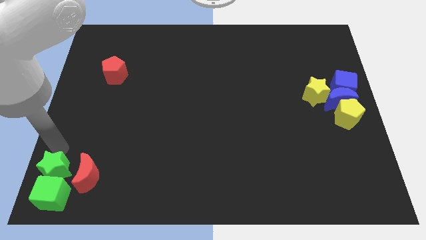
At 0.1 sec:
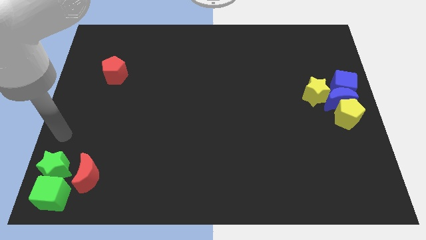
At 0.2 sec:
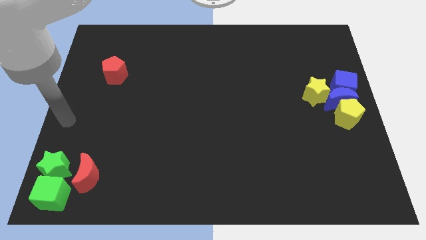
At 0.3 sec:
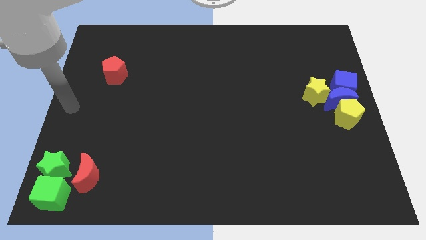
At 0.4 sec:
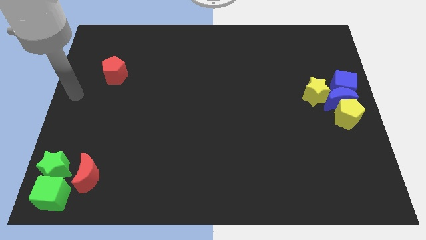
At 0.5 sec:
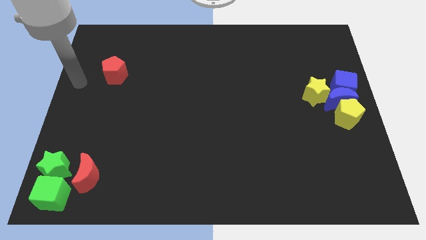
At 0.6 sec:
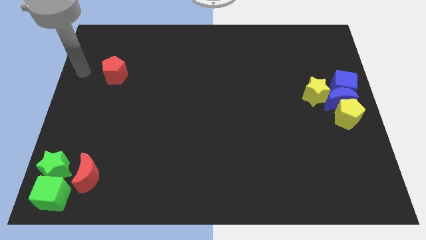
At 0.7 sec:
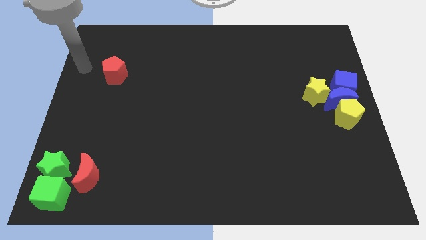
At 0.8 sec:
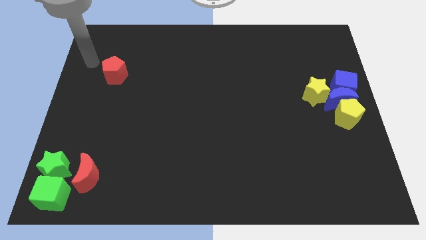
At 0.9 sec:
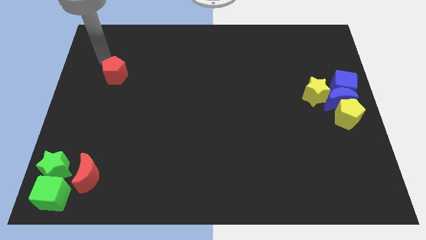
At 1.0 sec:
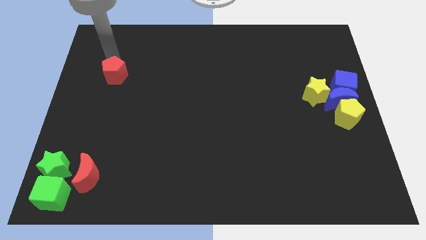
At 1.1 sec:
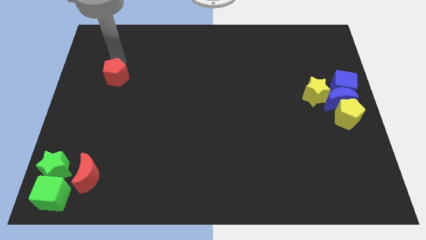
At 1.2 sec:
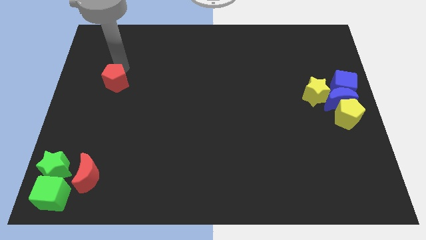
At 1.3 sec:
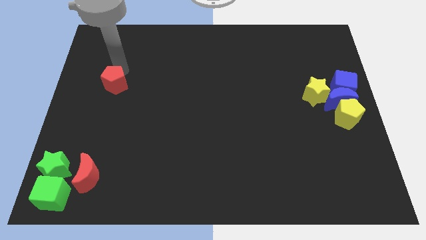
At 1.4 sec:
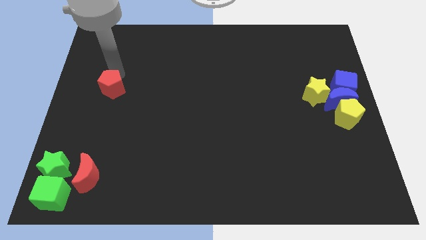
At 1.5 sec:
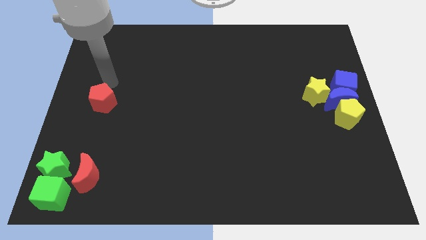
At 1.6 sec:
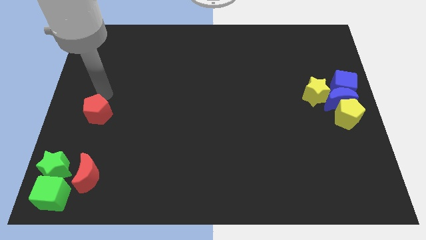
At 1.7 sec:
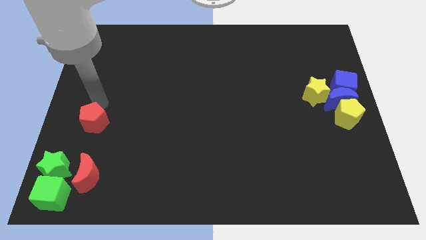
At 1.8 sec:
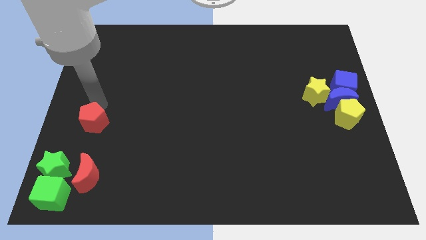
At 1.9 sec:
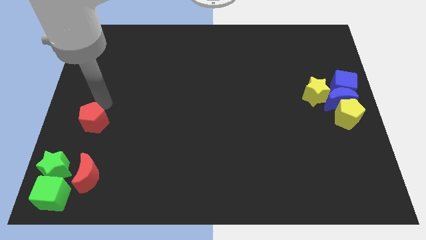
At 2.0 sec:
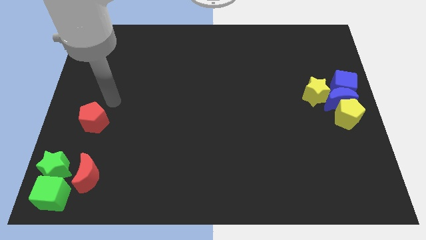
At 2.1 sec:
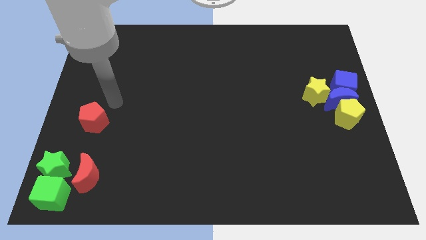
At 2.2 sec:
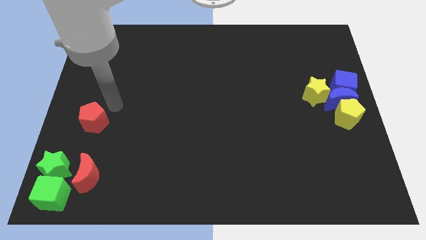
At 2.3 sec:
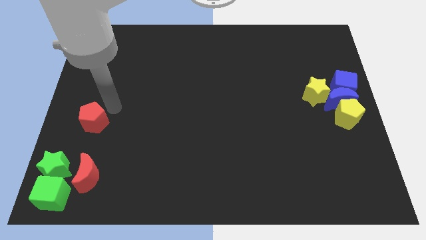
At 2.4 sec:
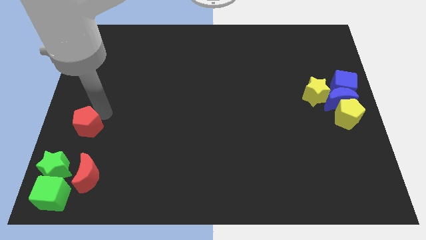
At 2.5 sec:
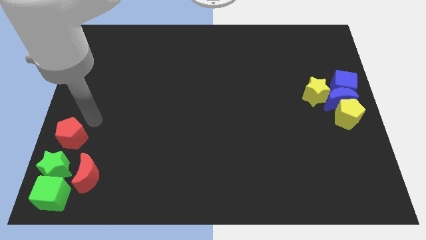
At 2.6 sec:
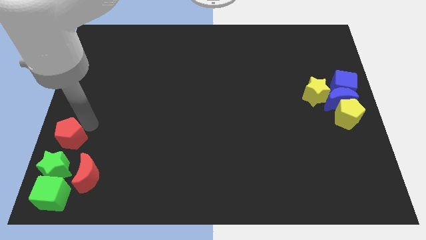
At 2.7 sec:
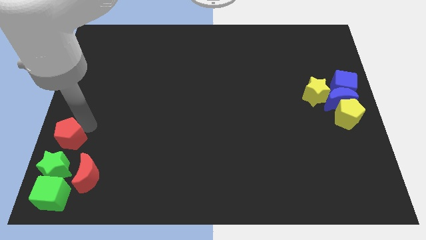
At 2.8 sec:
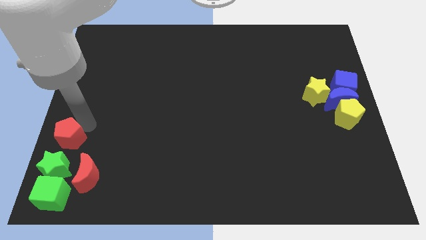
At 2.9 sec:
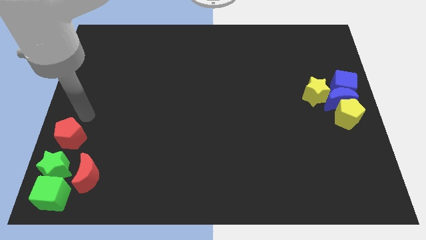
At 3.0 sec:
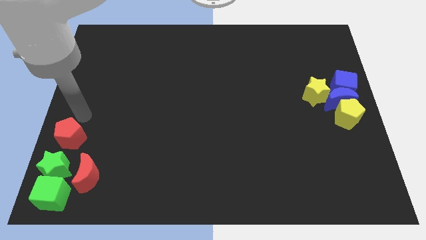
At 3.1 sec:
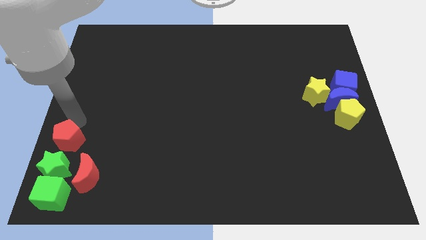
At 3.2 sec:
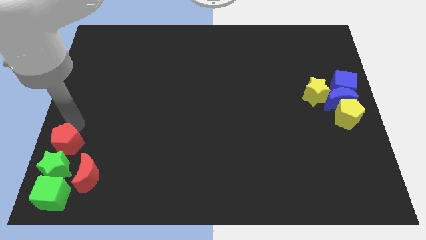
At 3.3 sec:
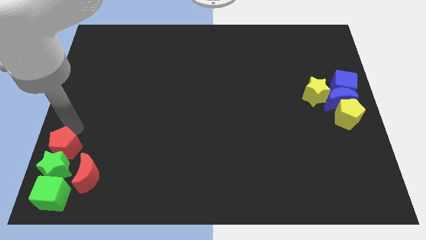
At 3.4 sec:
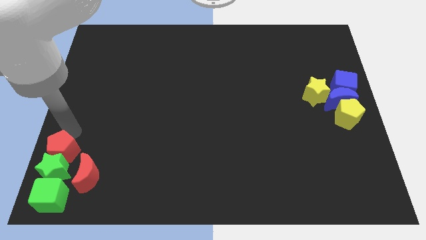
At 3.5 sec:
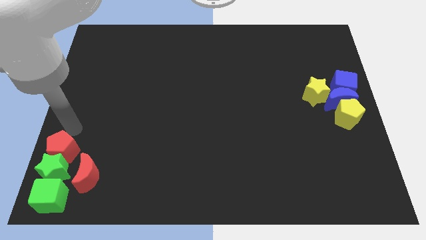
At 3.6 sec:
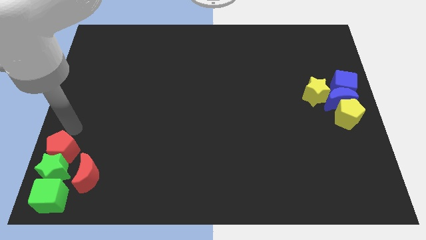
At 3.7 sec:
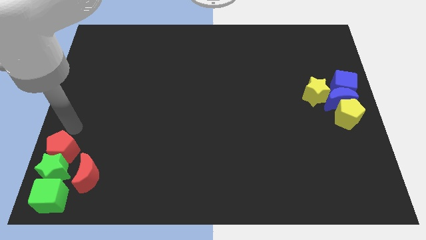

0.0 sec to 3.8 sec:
place red pentagon above green star

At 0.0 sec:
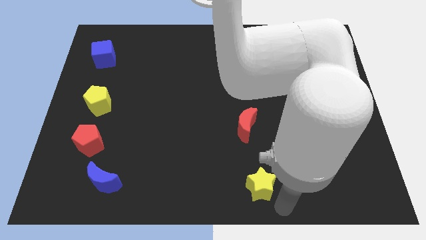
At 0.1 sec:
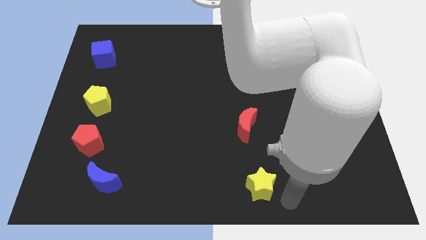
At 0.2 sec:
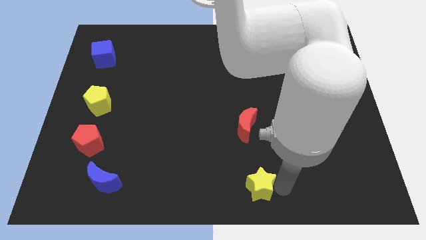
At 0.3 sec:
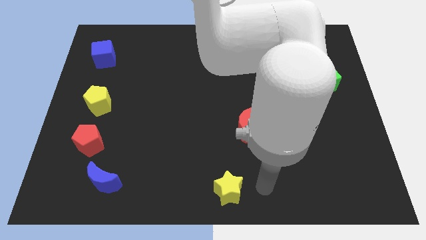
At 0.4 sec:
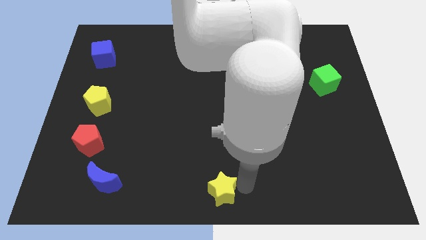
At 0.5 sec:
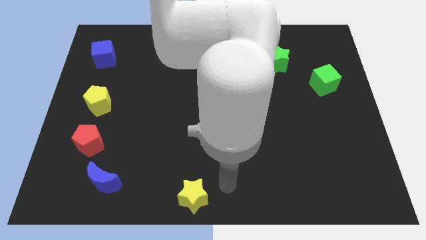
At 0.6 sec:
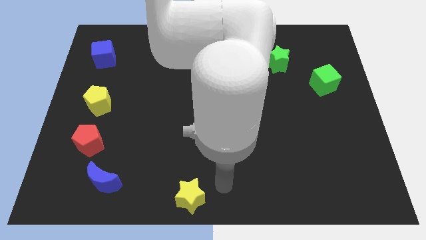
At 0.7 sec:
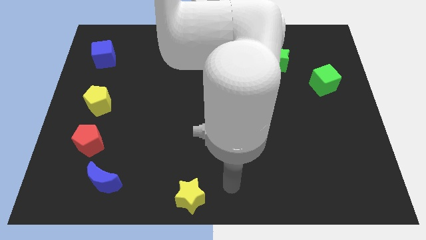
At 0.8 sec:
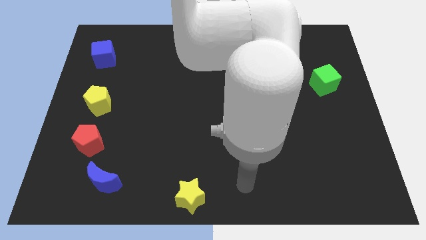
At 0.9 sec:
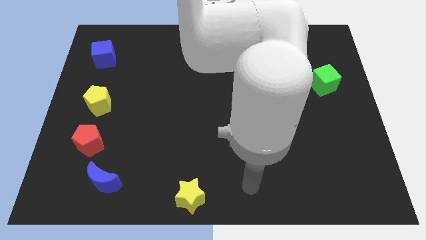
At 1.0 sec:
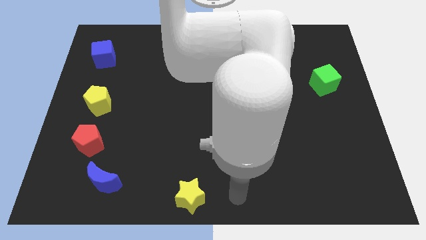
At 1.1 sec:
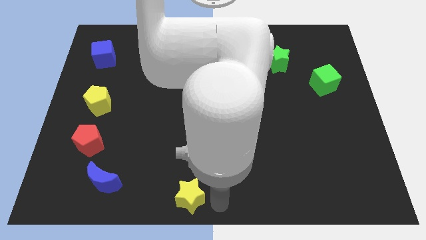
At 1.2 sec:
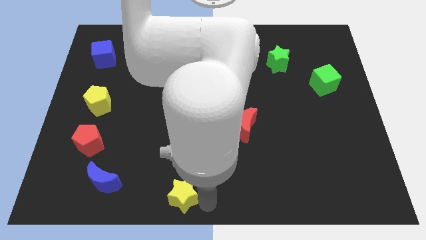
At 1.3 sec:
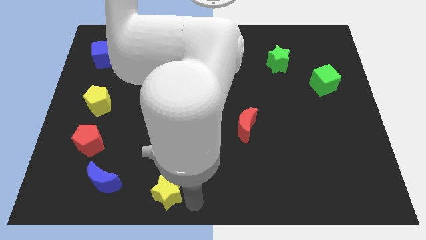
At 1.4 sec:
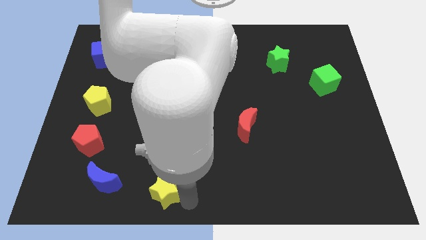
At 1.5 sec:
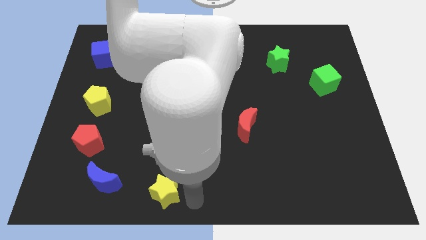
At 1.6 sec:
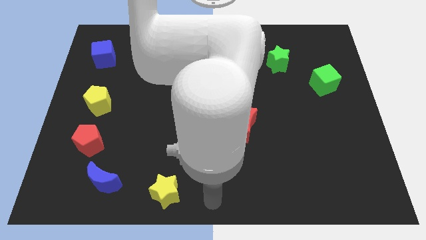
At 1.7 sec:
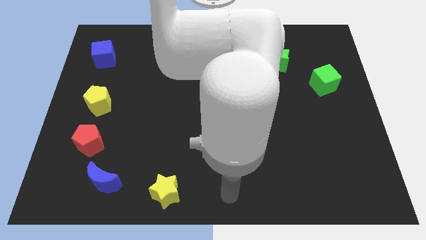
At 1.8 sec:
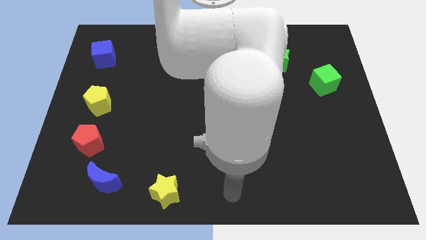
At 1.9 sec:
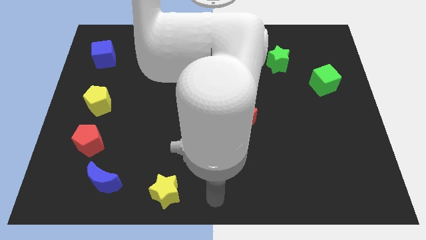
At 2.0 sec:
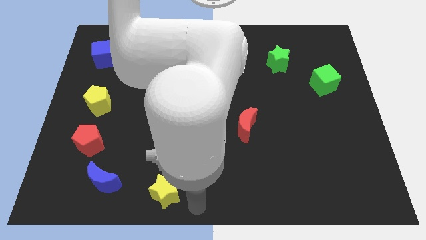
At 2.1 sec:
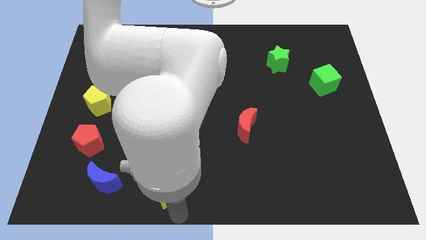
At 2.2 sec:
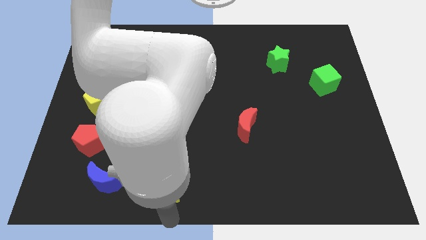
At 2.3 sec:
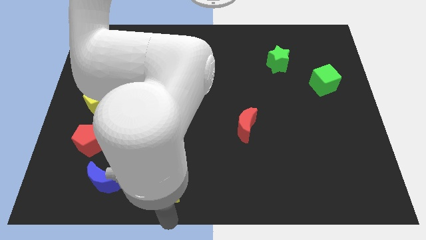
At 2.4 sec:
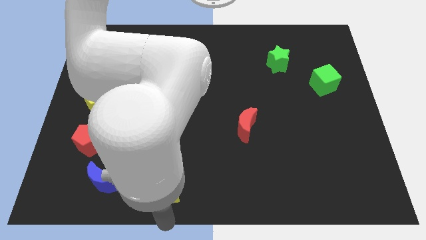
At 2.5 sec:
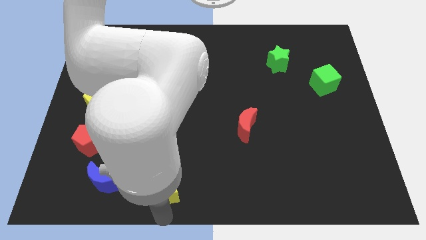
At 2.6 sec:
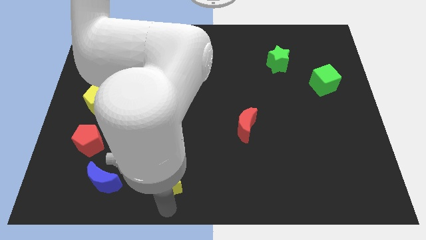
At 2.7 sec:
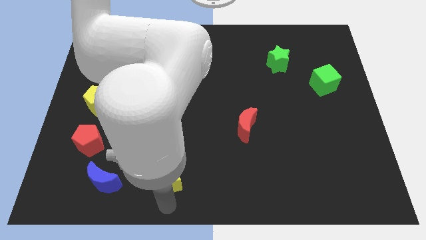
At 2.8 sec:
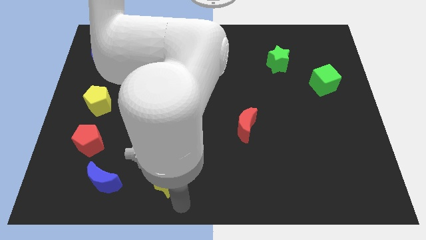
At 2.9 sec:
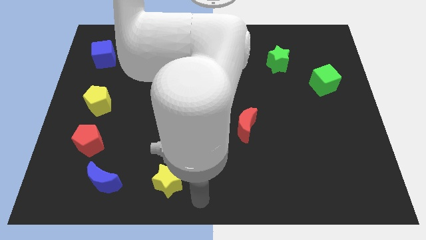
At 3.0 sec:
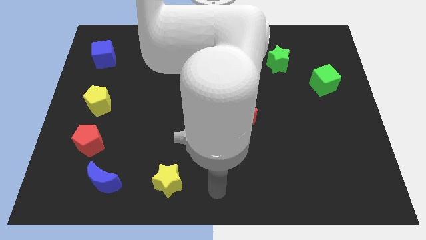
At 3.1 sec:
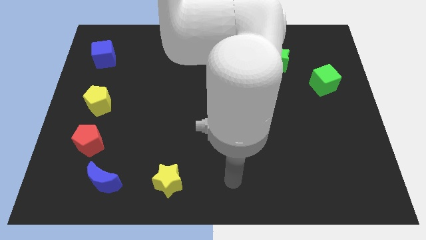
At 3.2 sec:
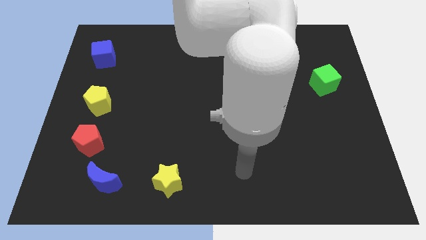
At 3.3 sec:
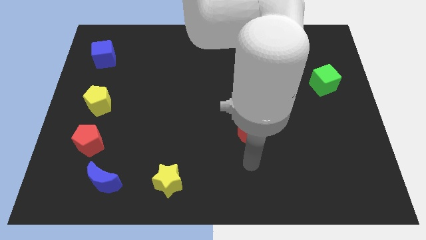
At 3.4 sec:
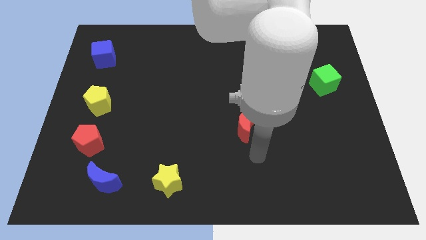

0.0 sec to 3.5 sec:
place the yellow star parallel to blue crescent

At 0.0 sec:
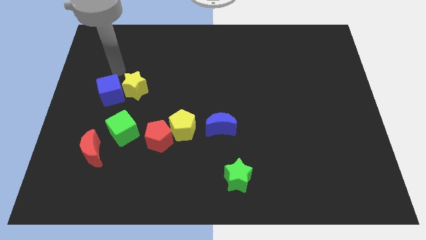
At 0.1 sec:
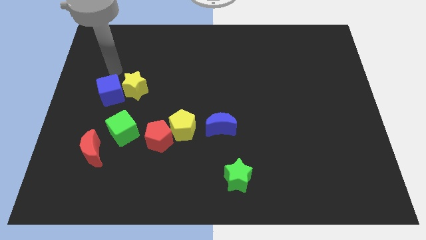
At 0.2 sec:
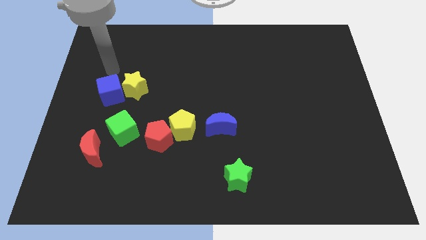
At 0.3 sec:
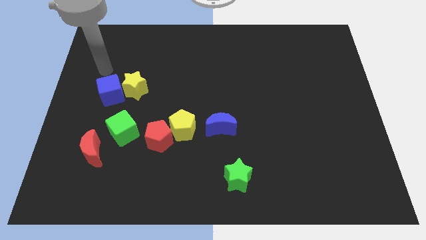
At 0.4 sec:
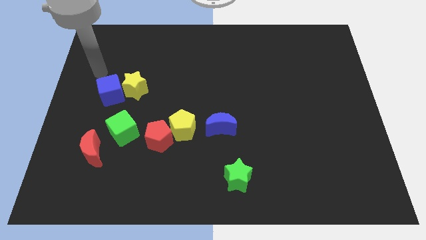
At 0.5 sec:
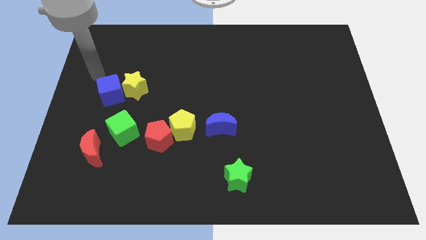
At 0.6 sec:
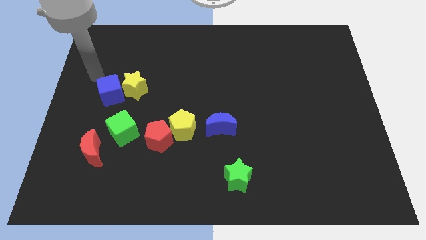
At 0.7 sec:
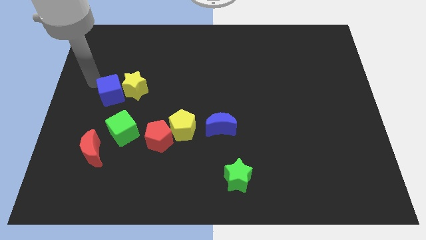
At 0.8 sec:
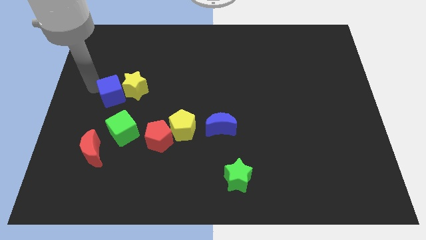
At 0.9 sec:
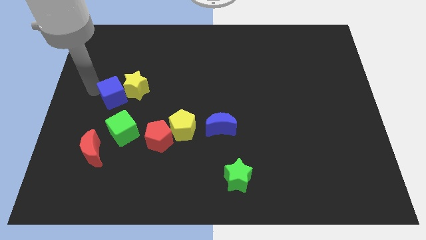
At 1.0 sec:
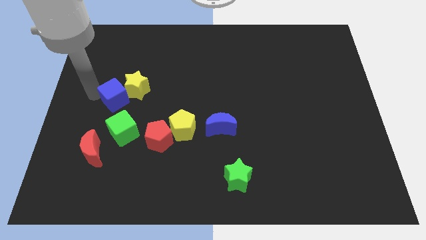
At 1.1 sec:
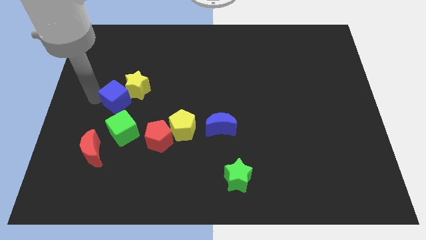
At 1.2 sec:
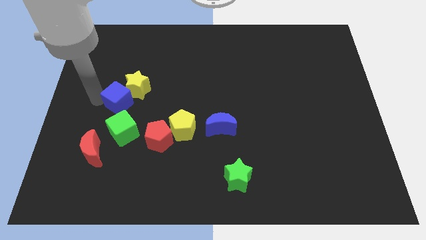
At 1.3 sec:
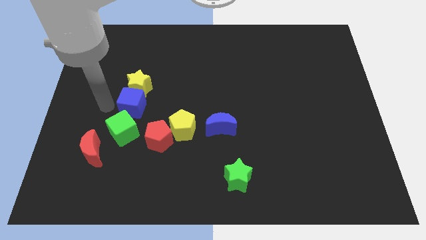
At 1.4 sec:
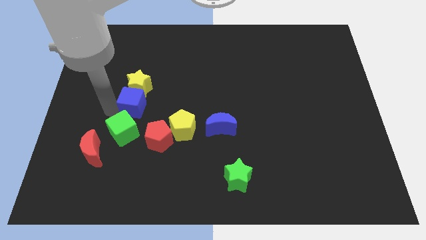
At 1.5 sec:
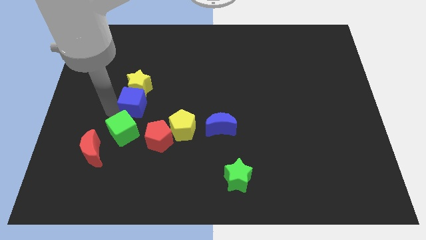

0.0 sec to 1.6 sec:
push the blue cube to the bottom of the yellow star
